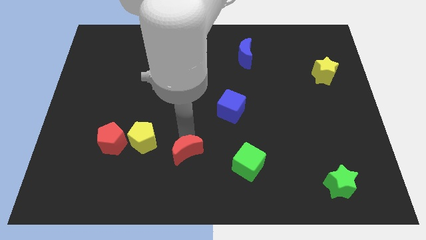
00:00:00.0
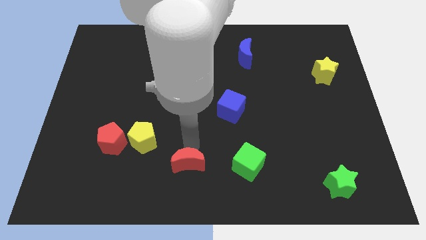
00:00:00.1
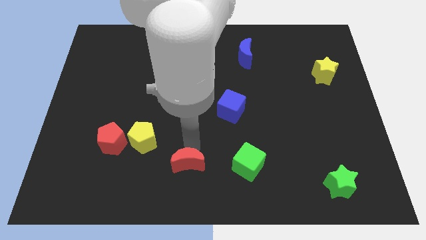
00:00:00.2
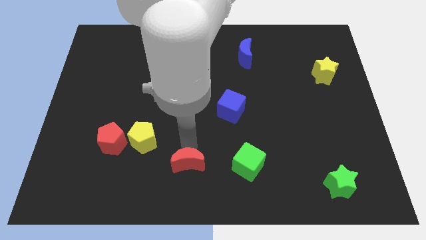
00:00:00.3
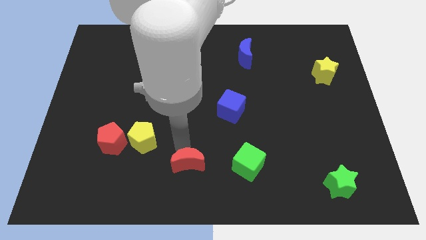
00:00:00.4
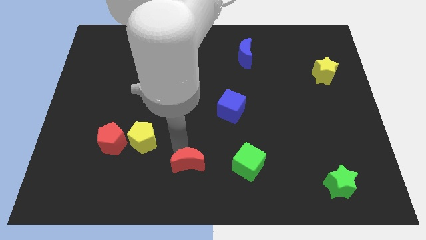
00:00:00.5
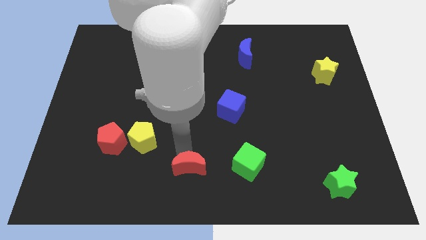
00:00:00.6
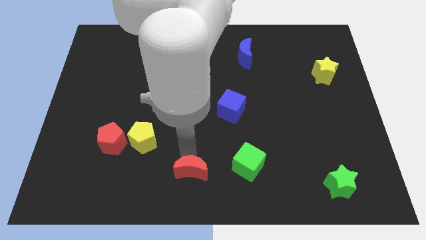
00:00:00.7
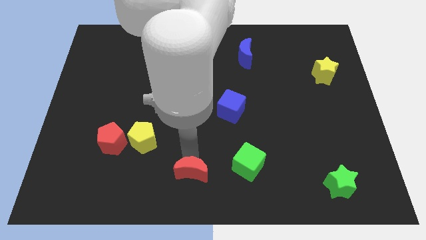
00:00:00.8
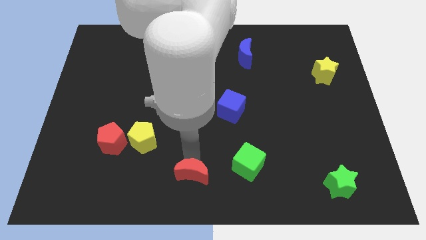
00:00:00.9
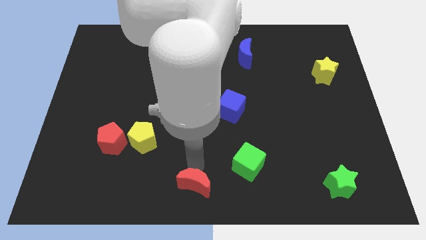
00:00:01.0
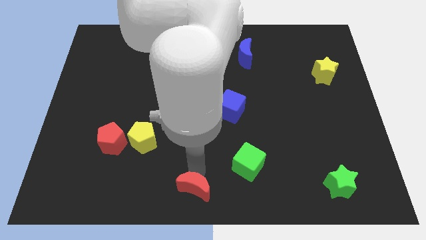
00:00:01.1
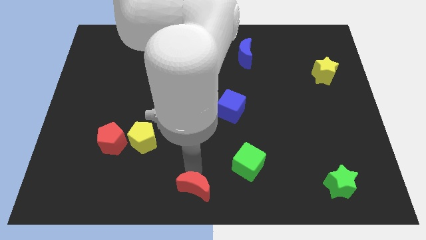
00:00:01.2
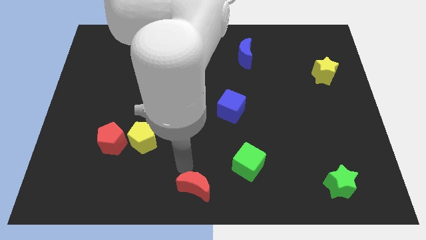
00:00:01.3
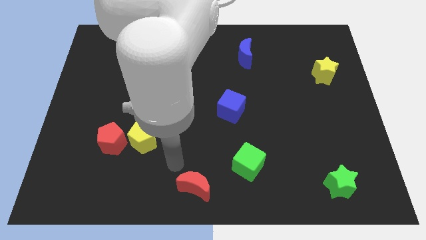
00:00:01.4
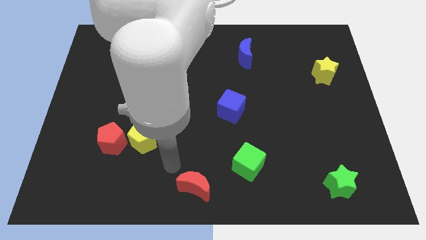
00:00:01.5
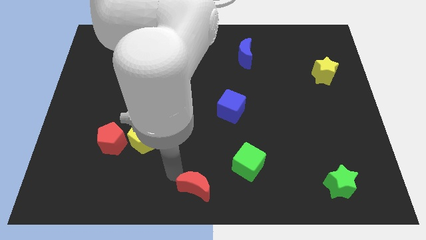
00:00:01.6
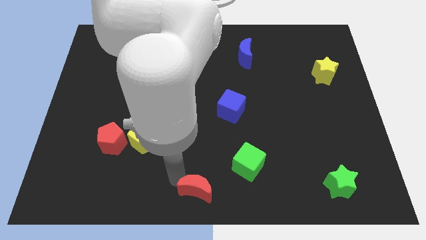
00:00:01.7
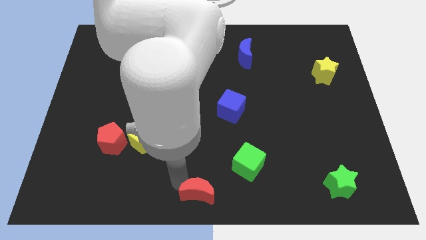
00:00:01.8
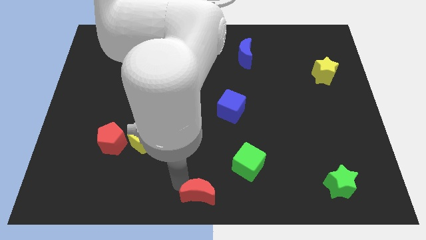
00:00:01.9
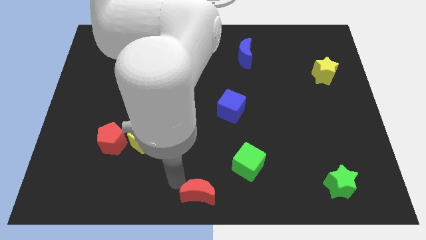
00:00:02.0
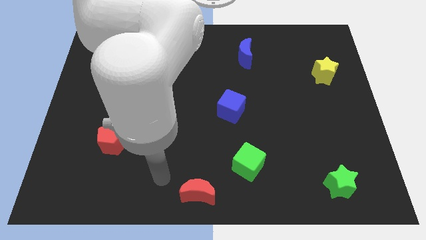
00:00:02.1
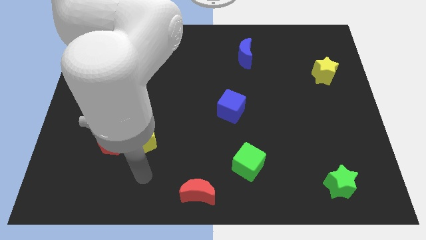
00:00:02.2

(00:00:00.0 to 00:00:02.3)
place the red moon at the bottom center of the board

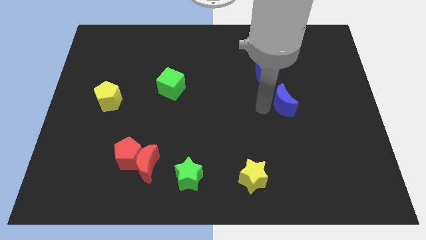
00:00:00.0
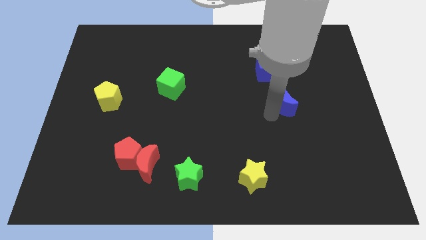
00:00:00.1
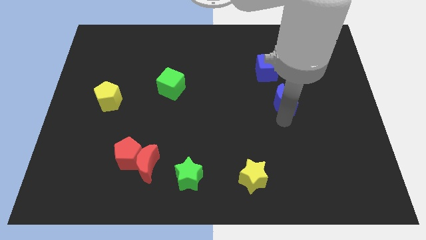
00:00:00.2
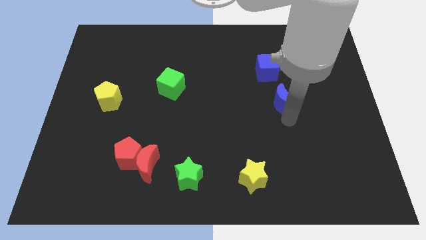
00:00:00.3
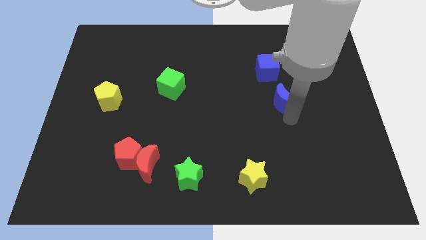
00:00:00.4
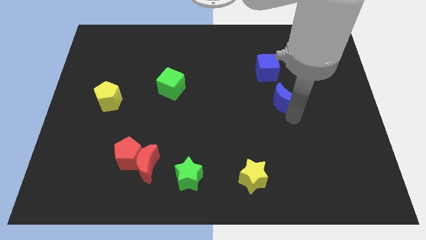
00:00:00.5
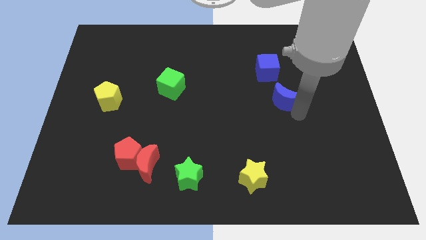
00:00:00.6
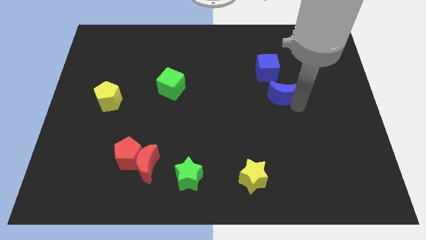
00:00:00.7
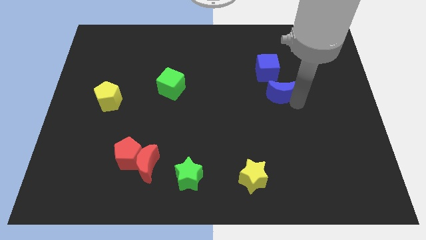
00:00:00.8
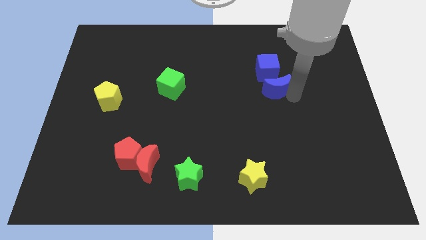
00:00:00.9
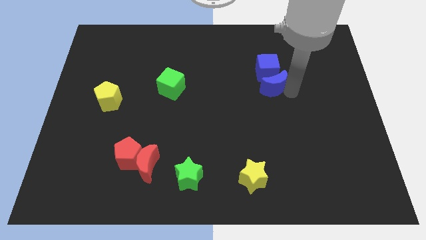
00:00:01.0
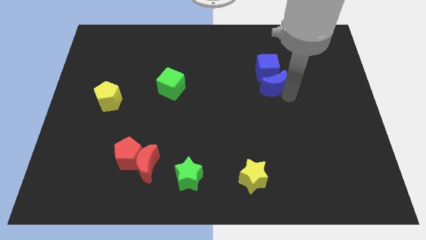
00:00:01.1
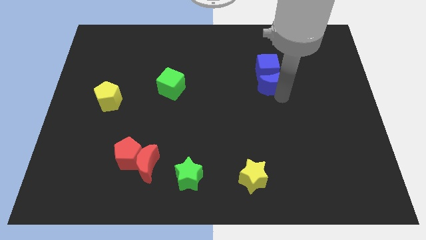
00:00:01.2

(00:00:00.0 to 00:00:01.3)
place the blue moon below the blue cube

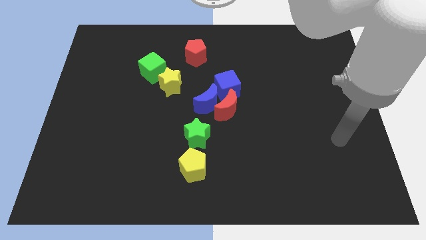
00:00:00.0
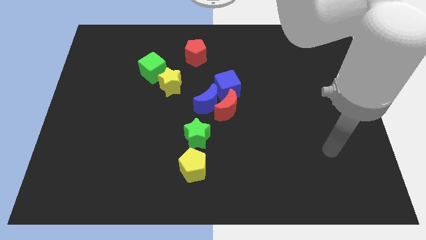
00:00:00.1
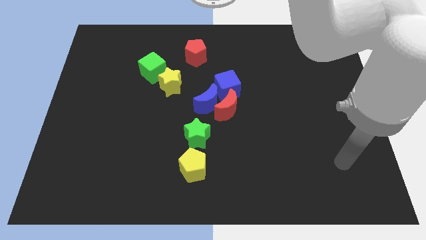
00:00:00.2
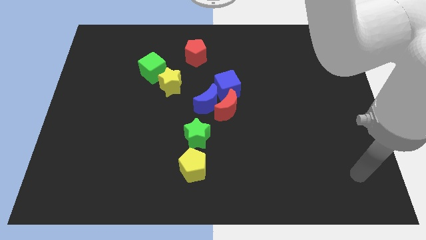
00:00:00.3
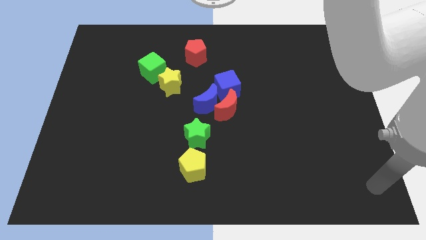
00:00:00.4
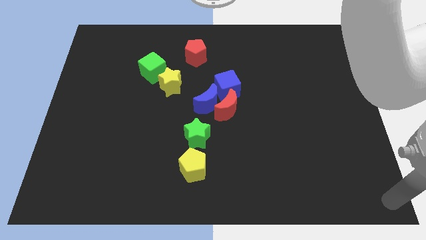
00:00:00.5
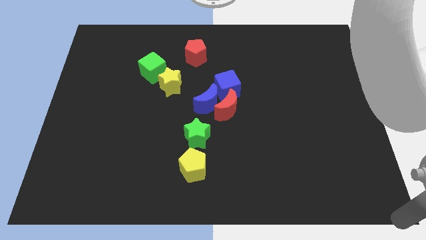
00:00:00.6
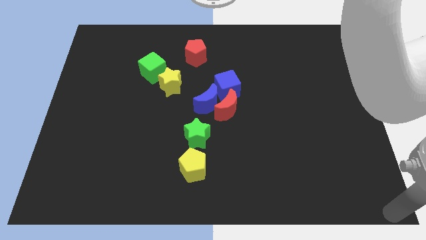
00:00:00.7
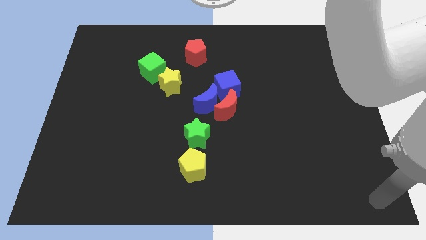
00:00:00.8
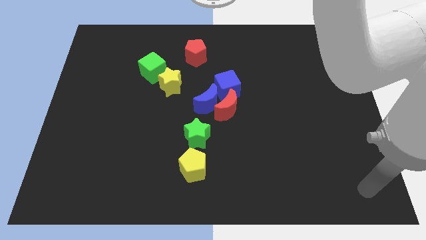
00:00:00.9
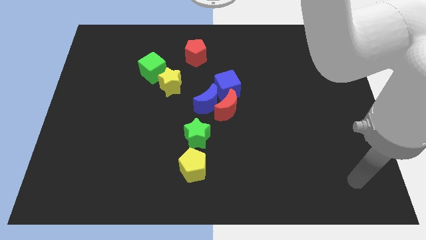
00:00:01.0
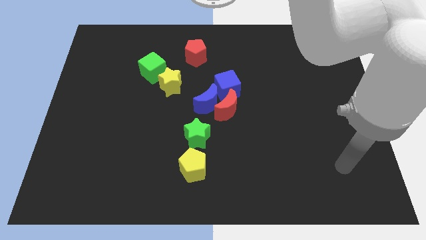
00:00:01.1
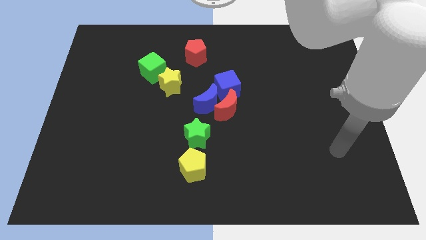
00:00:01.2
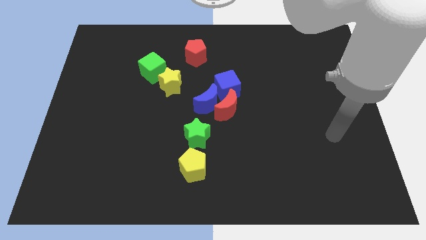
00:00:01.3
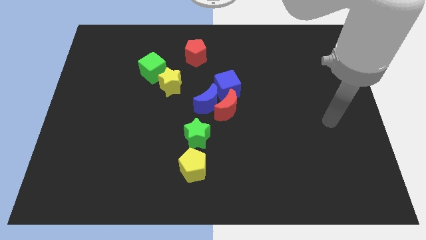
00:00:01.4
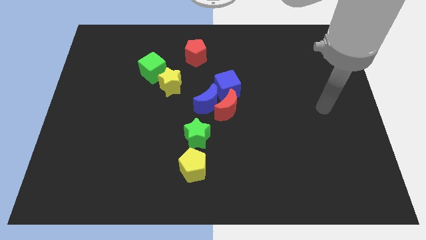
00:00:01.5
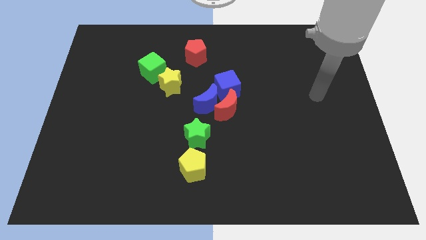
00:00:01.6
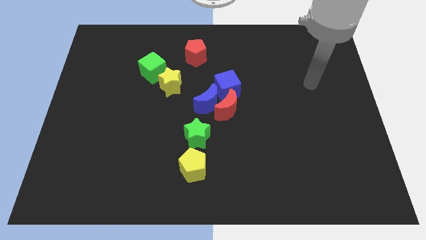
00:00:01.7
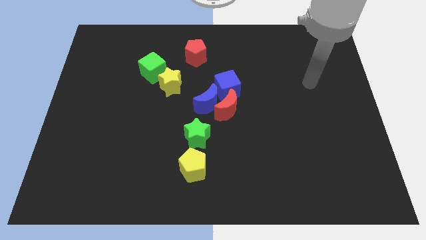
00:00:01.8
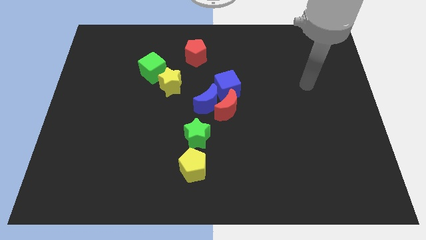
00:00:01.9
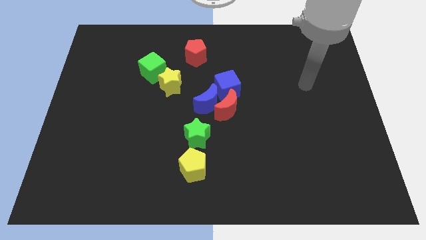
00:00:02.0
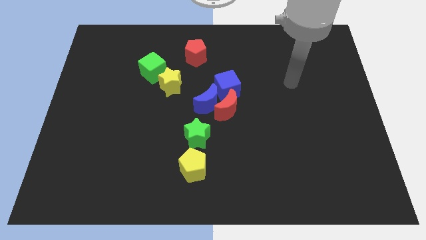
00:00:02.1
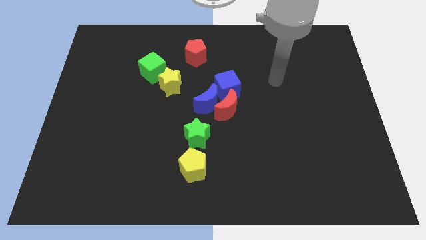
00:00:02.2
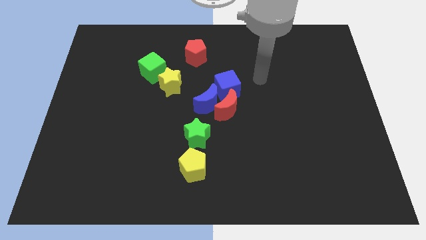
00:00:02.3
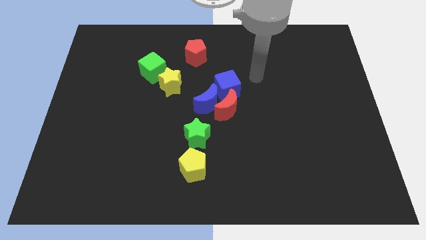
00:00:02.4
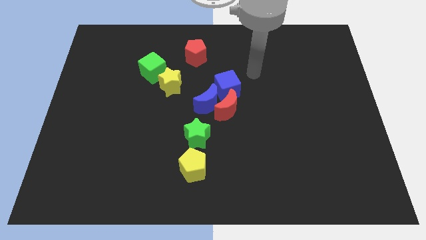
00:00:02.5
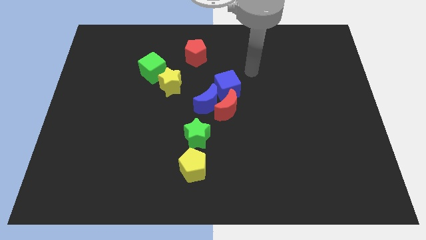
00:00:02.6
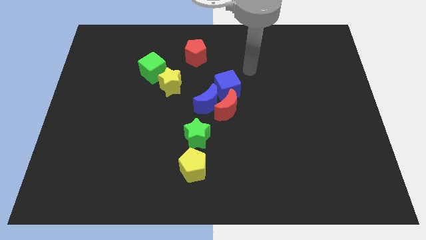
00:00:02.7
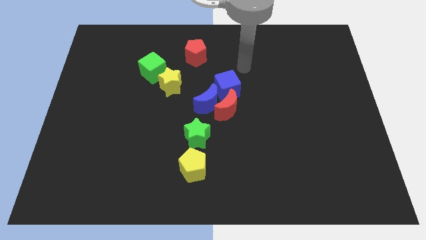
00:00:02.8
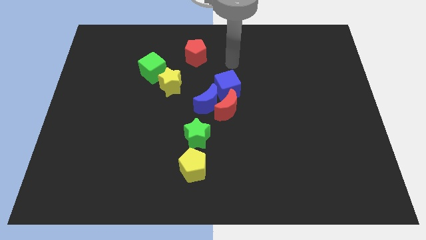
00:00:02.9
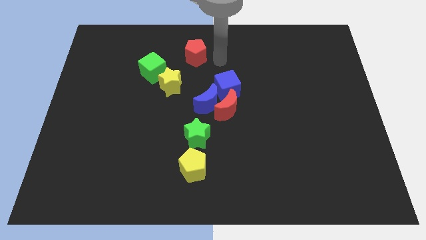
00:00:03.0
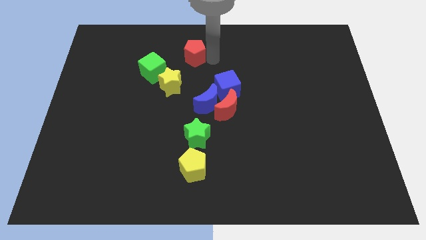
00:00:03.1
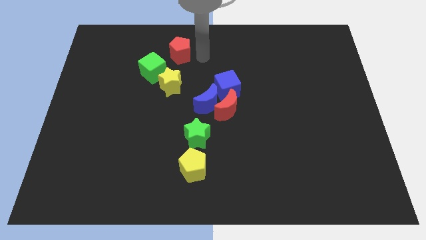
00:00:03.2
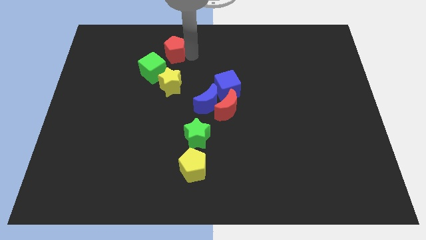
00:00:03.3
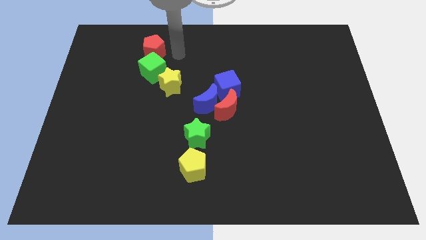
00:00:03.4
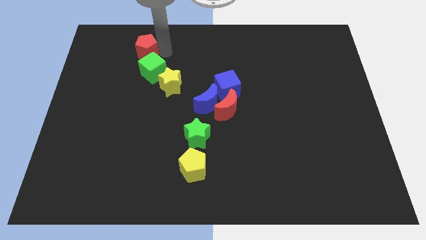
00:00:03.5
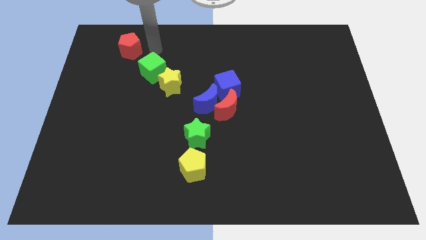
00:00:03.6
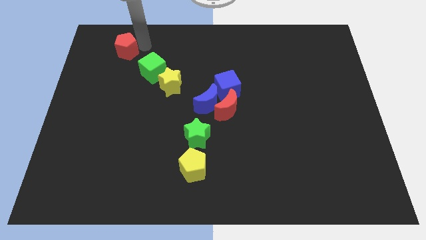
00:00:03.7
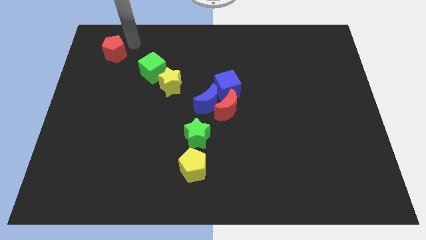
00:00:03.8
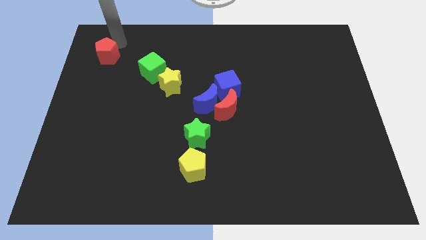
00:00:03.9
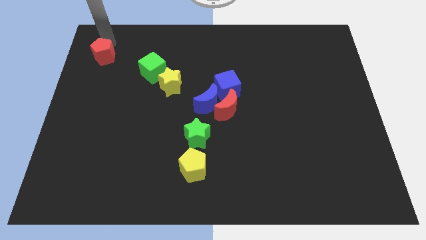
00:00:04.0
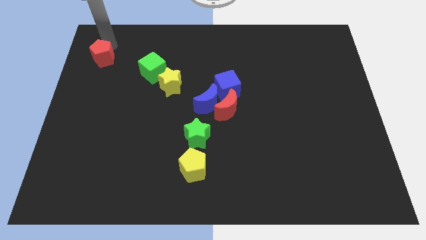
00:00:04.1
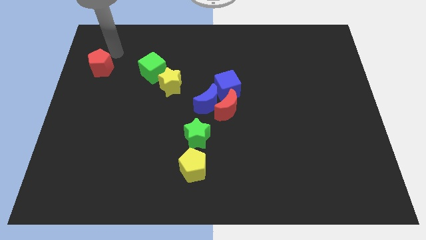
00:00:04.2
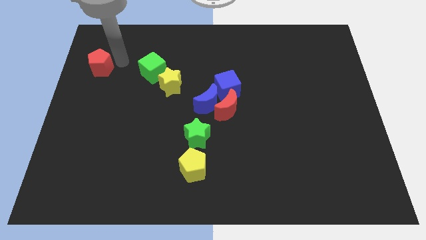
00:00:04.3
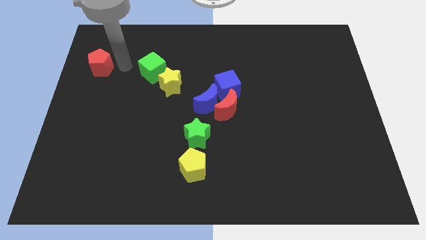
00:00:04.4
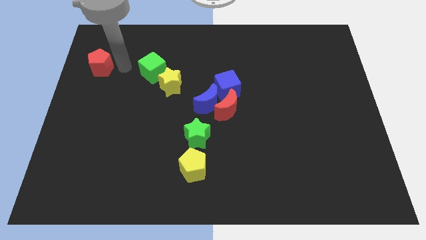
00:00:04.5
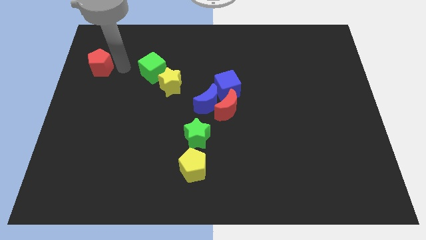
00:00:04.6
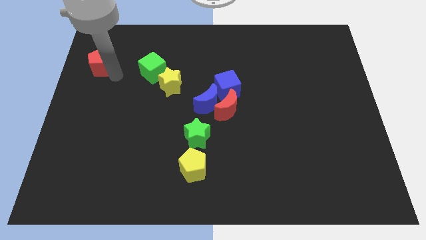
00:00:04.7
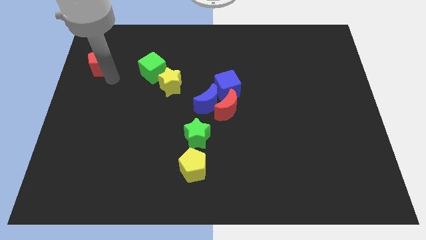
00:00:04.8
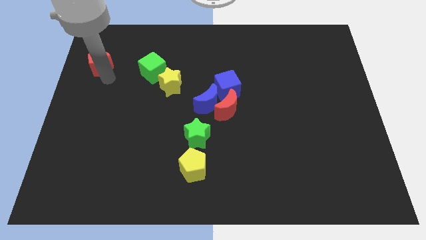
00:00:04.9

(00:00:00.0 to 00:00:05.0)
move the red pentagon parallel to the left side of the green cube
